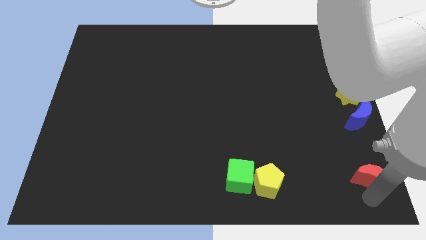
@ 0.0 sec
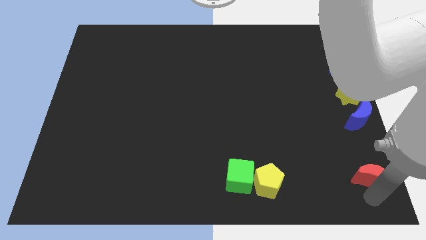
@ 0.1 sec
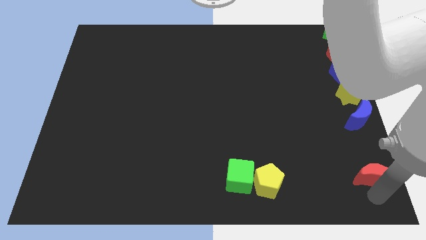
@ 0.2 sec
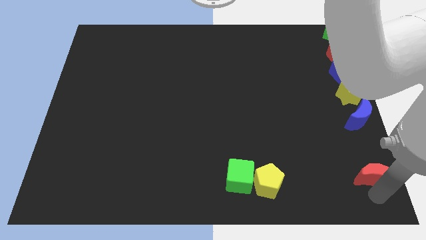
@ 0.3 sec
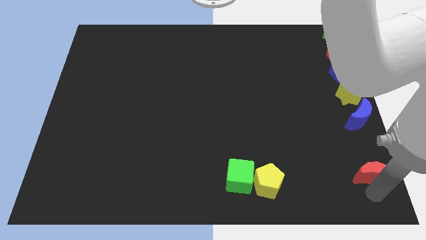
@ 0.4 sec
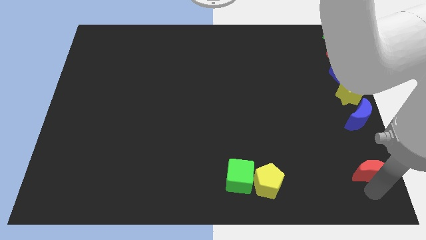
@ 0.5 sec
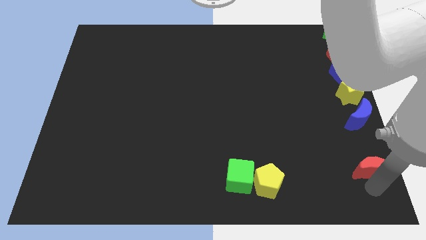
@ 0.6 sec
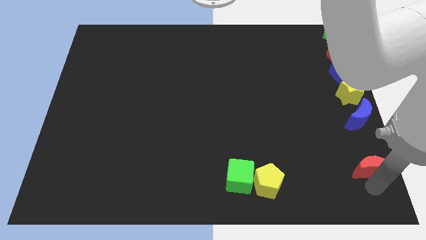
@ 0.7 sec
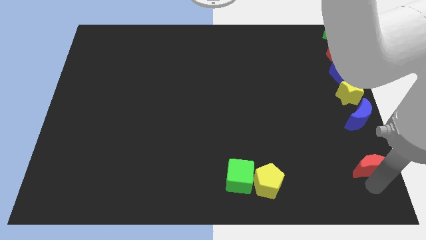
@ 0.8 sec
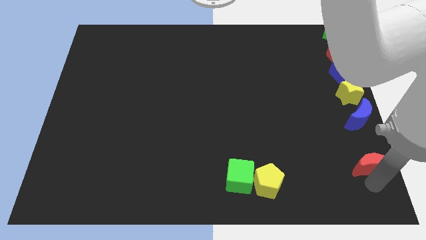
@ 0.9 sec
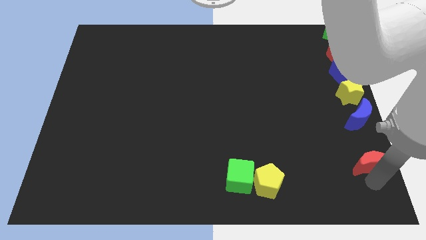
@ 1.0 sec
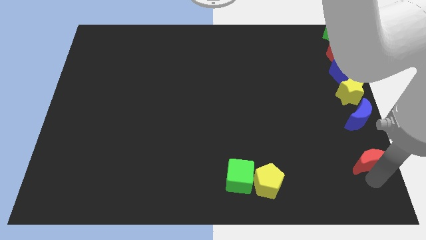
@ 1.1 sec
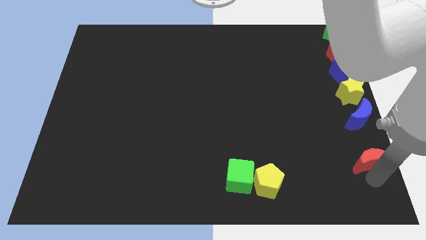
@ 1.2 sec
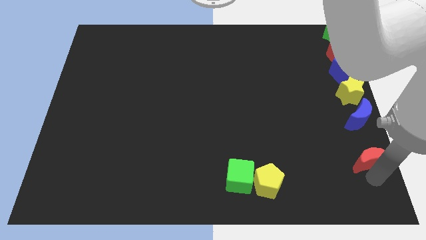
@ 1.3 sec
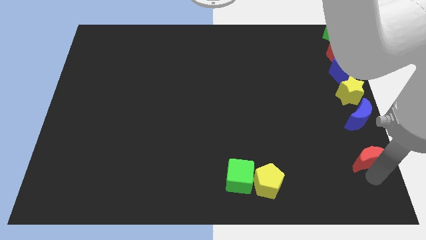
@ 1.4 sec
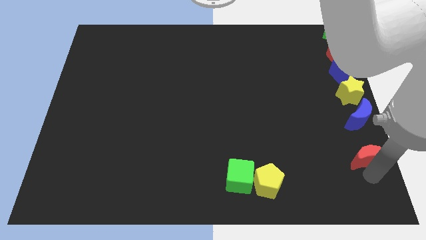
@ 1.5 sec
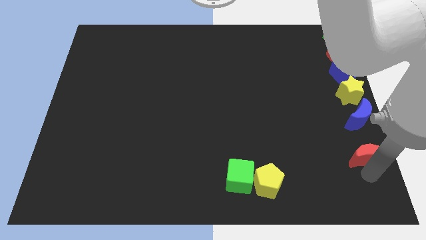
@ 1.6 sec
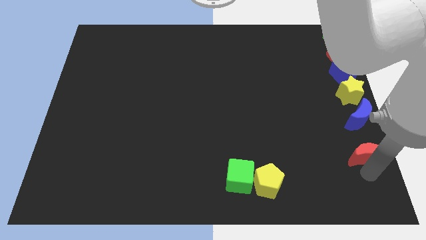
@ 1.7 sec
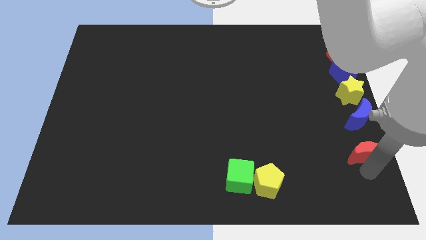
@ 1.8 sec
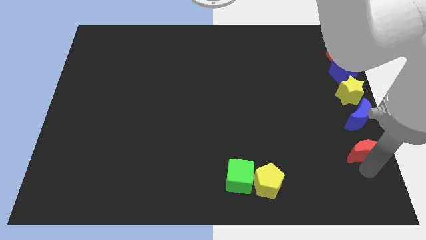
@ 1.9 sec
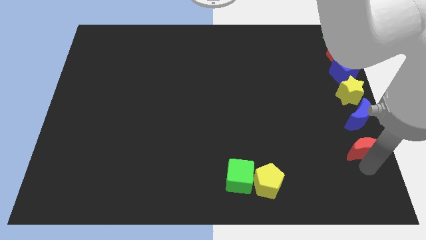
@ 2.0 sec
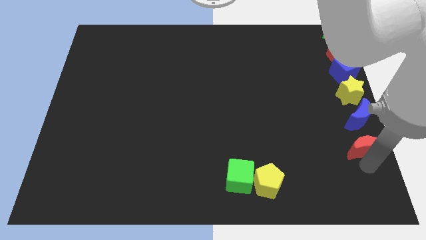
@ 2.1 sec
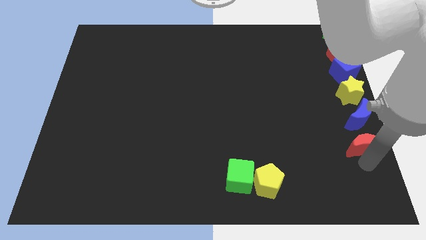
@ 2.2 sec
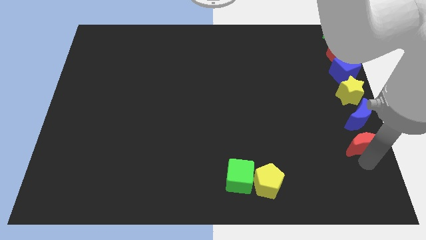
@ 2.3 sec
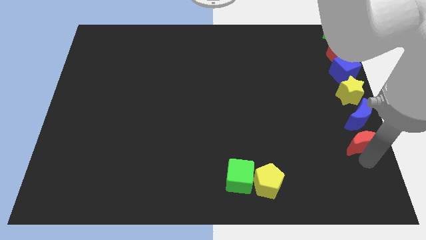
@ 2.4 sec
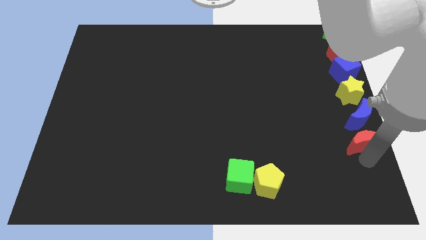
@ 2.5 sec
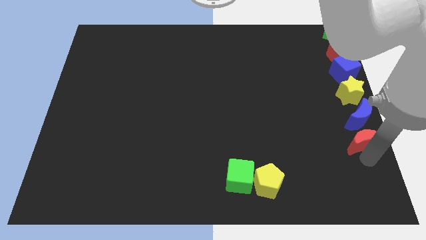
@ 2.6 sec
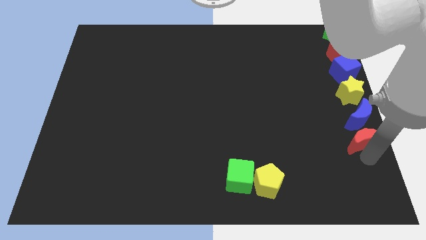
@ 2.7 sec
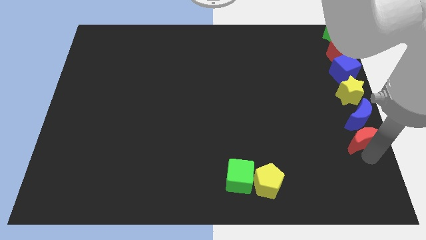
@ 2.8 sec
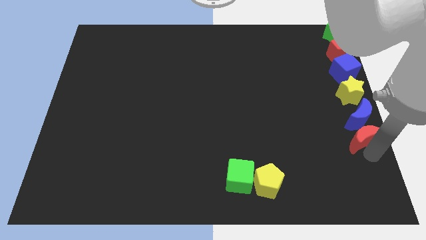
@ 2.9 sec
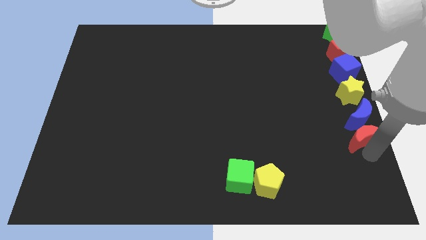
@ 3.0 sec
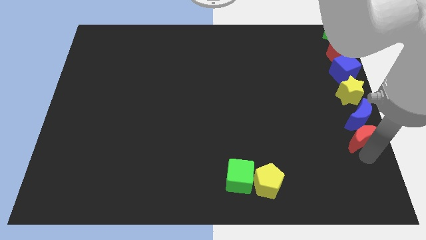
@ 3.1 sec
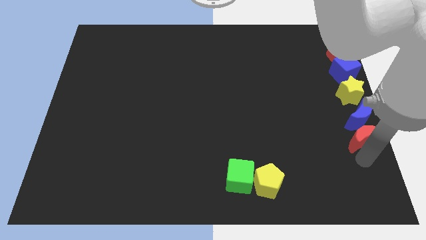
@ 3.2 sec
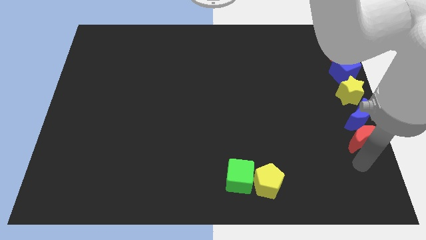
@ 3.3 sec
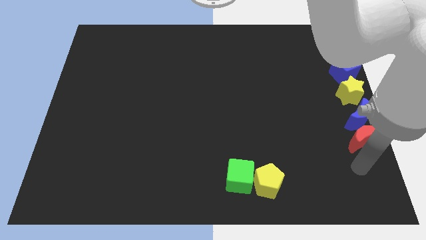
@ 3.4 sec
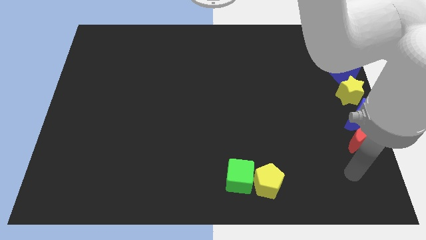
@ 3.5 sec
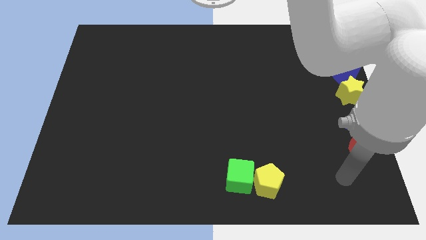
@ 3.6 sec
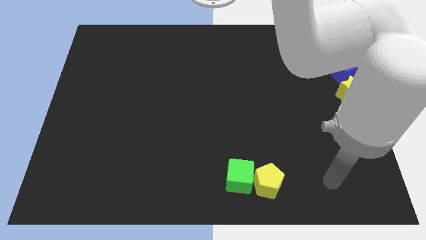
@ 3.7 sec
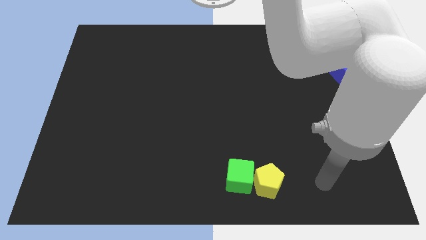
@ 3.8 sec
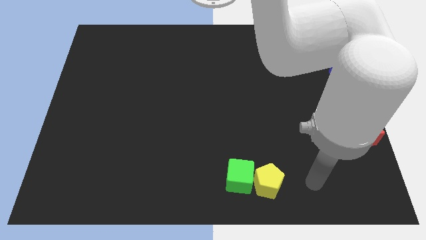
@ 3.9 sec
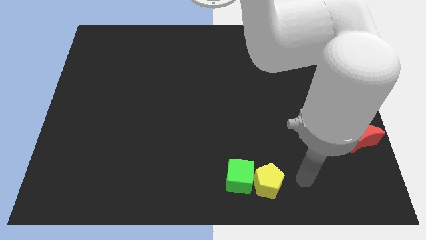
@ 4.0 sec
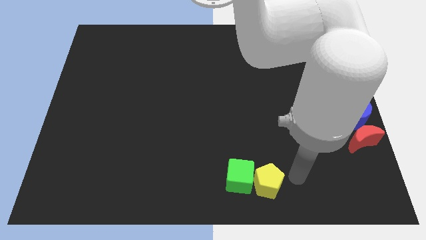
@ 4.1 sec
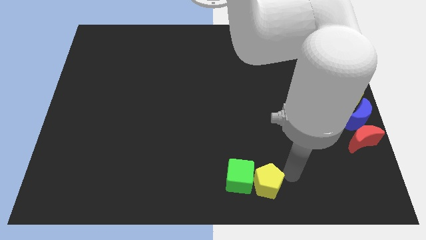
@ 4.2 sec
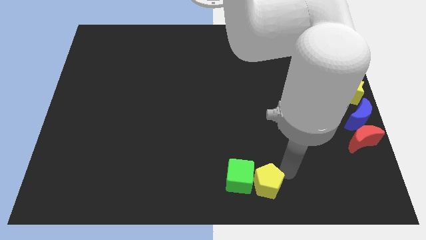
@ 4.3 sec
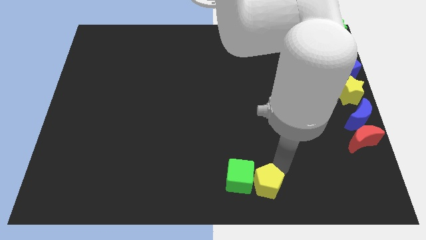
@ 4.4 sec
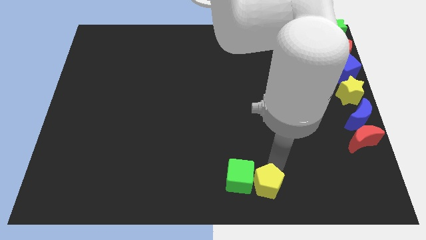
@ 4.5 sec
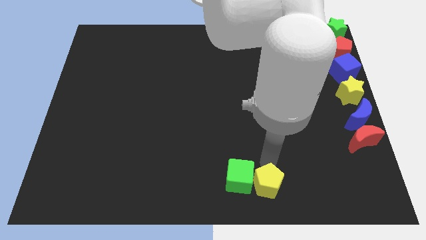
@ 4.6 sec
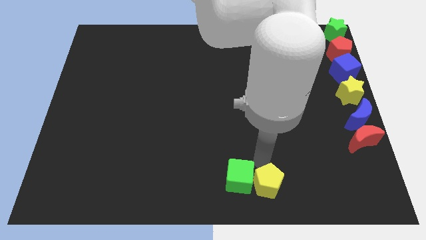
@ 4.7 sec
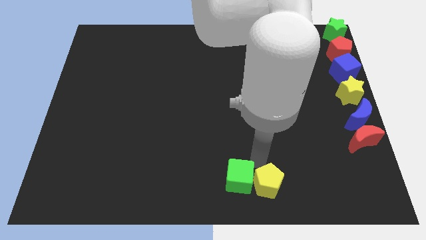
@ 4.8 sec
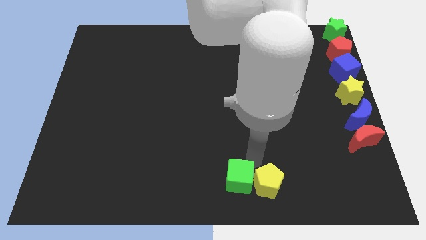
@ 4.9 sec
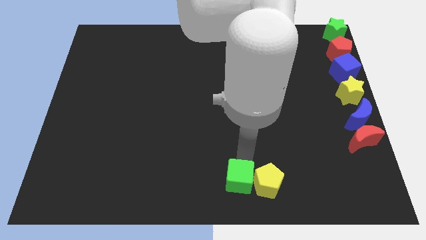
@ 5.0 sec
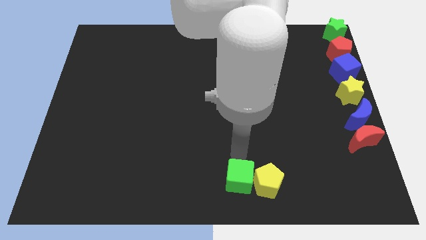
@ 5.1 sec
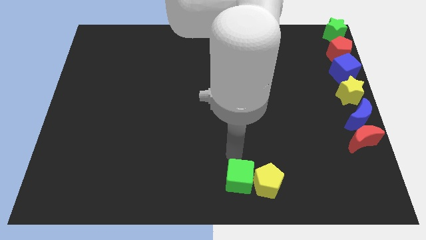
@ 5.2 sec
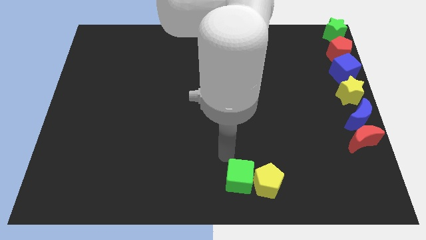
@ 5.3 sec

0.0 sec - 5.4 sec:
place the red crescent below the blue crescent

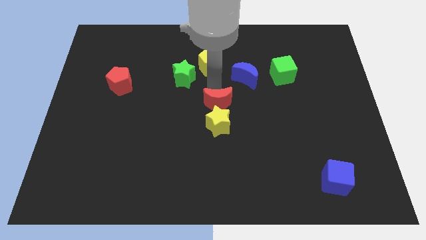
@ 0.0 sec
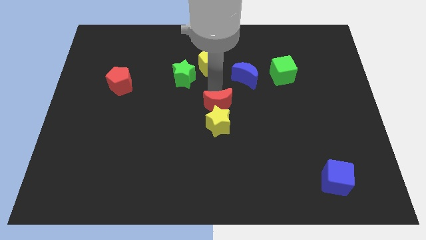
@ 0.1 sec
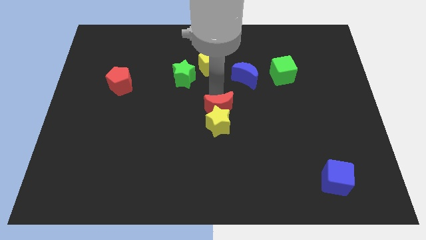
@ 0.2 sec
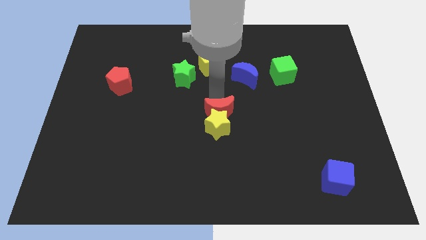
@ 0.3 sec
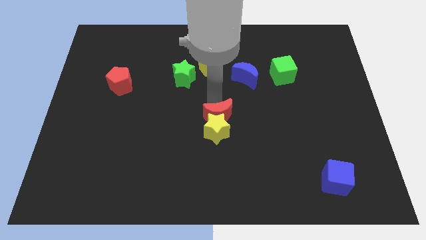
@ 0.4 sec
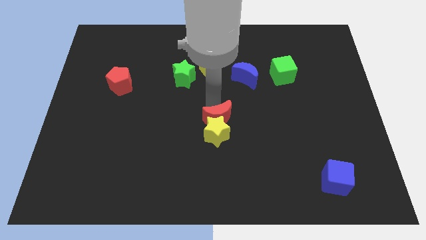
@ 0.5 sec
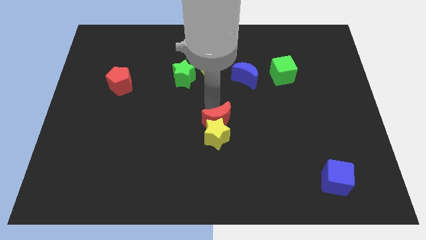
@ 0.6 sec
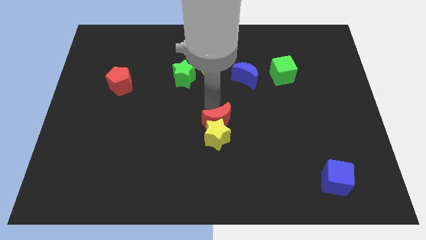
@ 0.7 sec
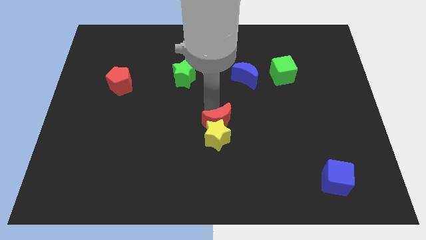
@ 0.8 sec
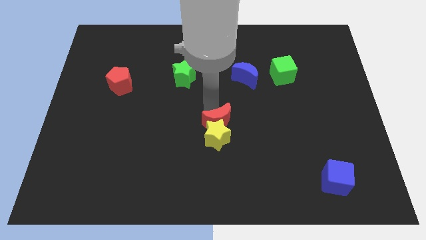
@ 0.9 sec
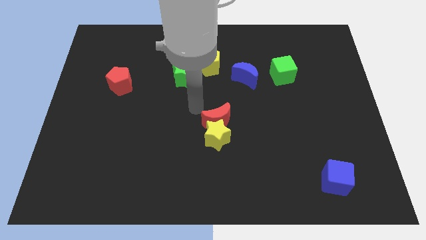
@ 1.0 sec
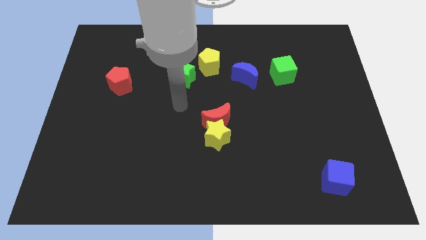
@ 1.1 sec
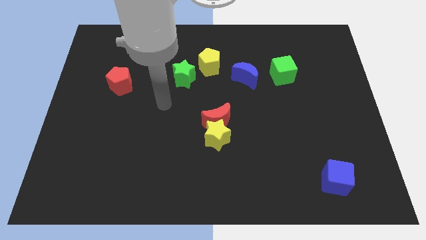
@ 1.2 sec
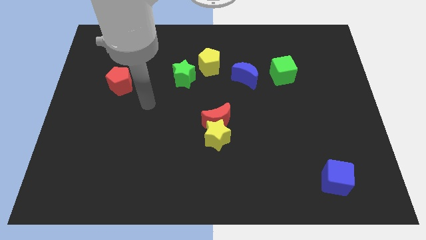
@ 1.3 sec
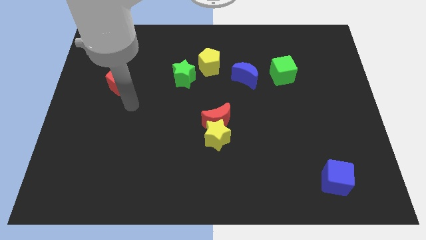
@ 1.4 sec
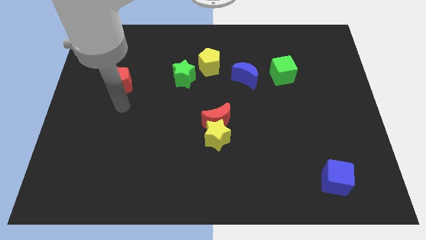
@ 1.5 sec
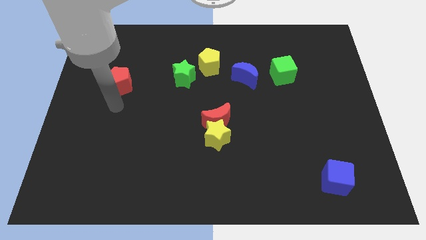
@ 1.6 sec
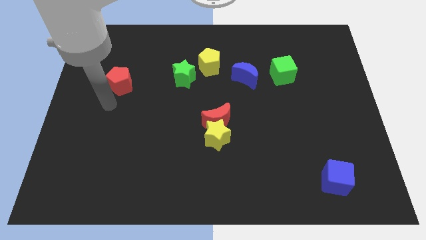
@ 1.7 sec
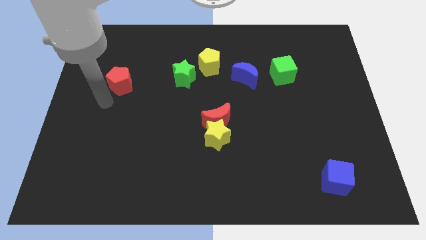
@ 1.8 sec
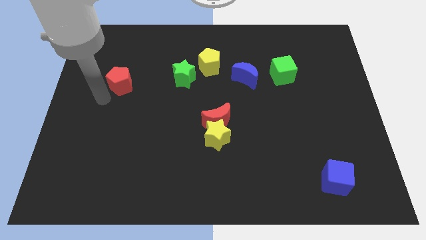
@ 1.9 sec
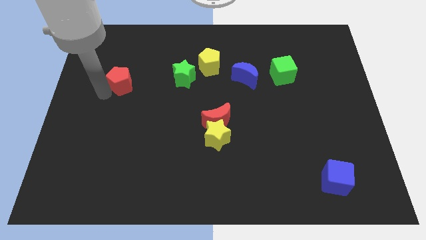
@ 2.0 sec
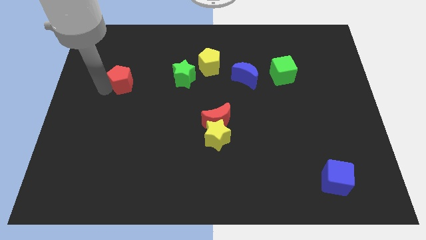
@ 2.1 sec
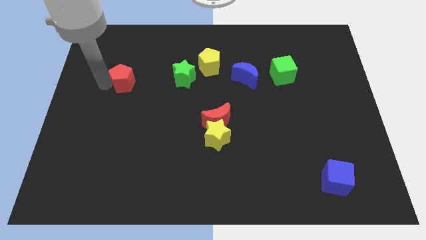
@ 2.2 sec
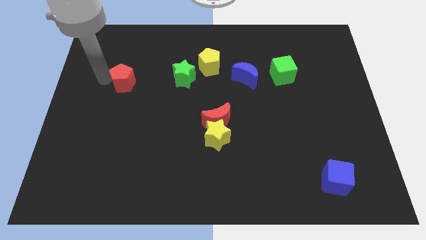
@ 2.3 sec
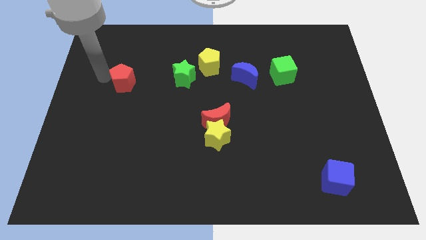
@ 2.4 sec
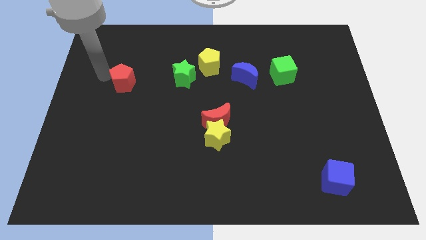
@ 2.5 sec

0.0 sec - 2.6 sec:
push the red moon and yellow star to the center

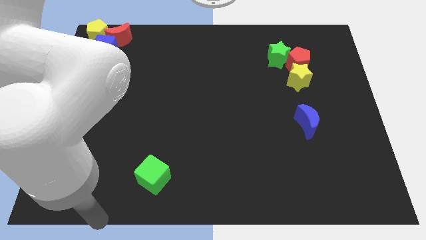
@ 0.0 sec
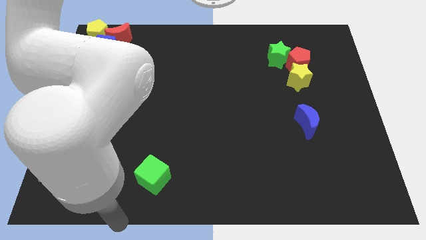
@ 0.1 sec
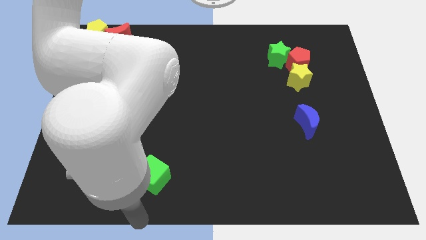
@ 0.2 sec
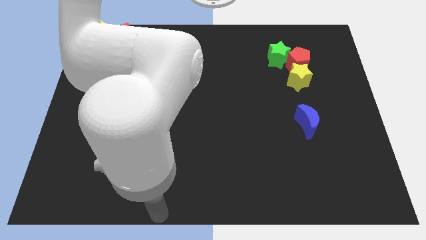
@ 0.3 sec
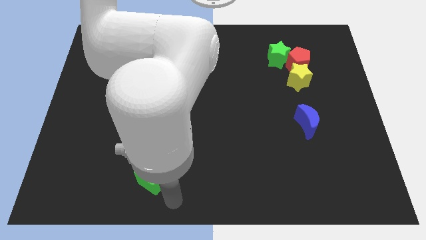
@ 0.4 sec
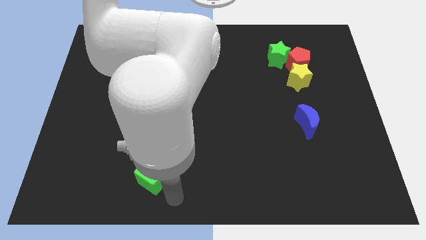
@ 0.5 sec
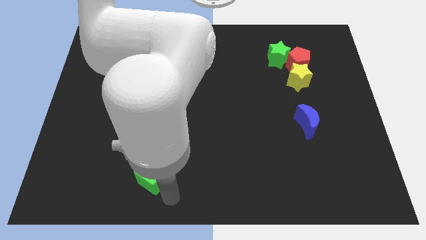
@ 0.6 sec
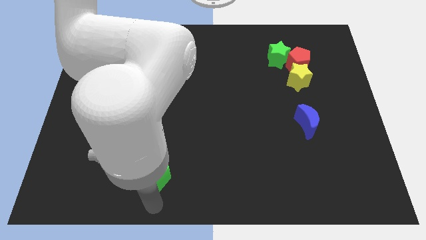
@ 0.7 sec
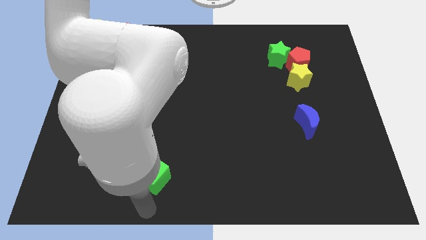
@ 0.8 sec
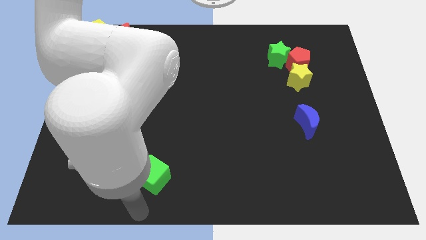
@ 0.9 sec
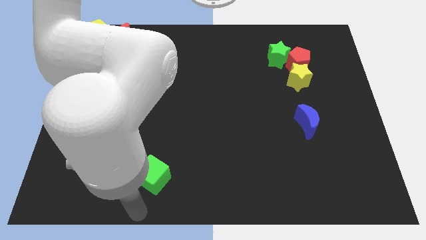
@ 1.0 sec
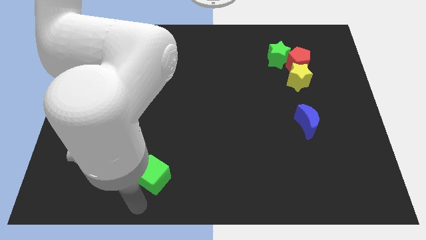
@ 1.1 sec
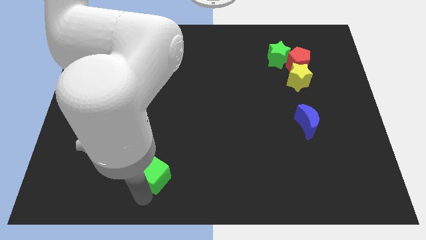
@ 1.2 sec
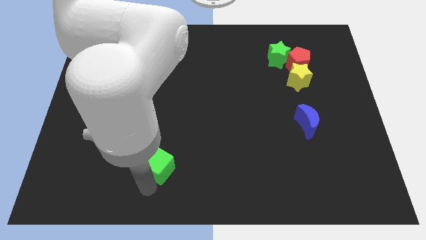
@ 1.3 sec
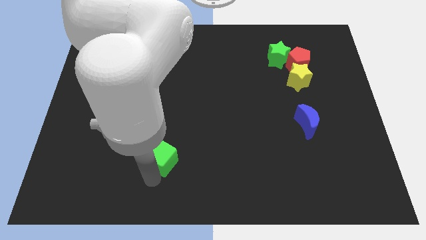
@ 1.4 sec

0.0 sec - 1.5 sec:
drag the green cube to the top side of the board
